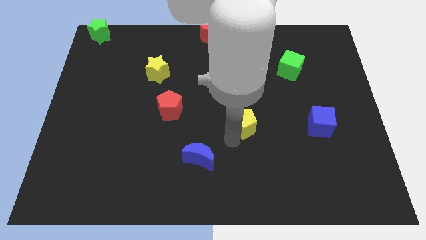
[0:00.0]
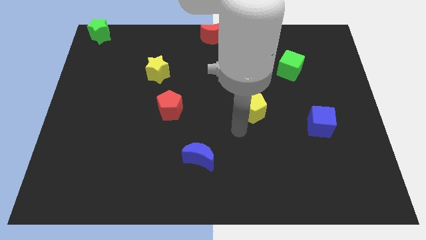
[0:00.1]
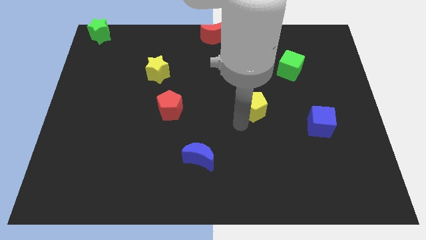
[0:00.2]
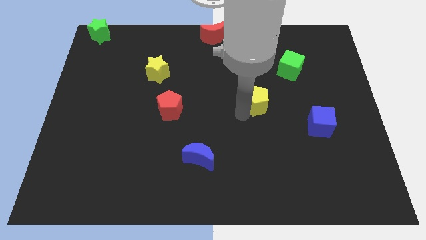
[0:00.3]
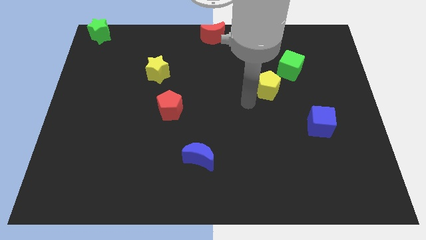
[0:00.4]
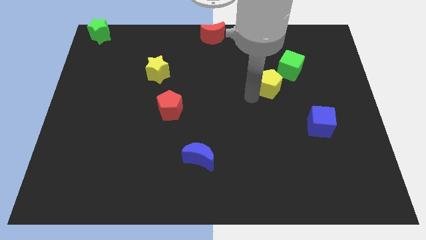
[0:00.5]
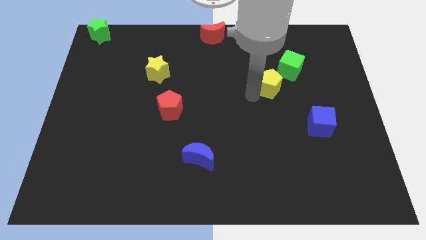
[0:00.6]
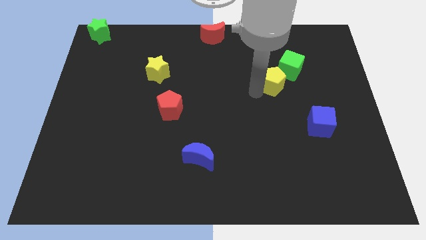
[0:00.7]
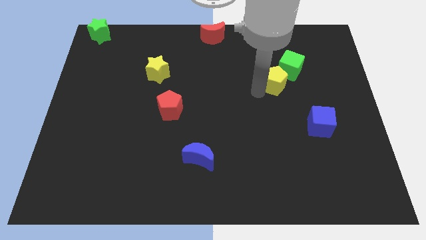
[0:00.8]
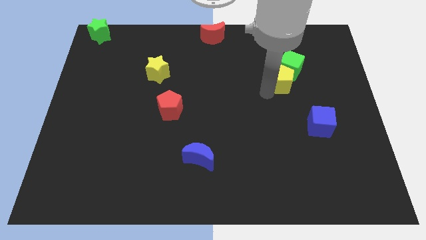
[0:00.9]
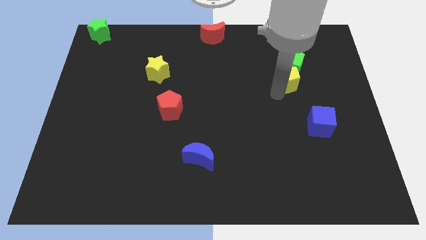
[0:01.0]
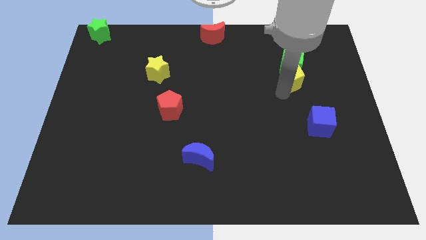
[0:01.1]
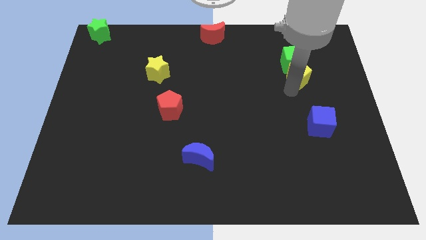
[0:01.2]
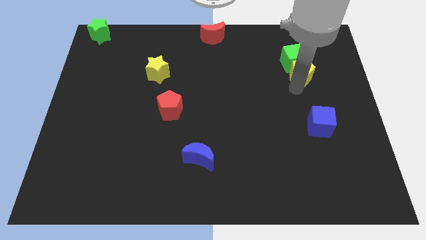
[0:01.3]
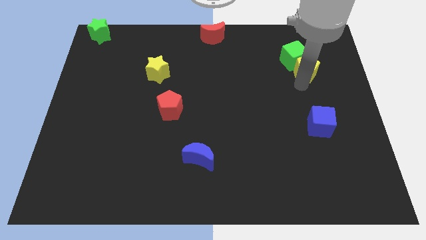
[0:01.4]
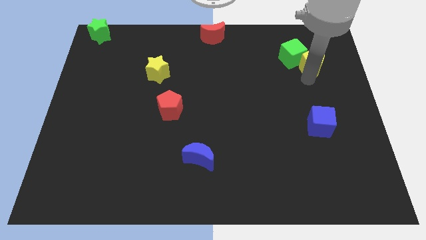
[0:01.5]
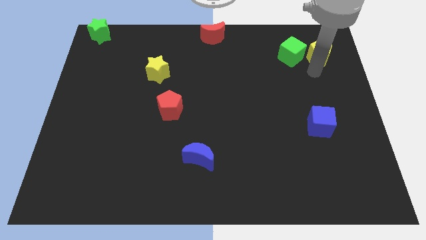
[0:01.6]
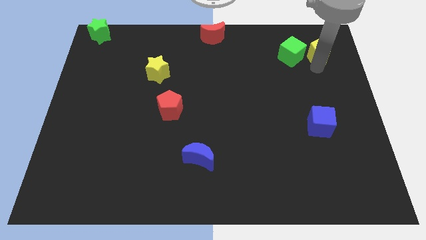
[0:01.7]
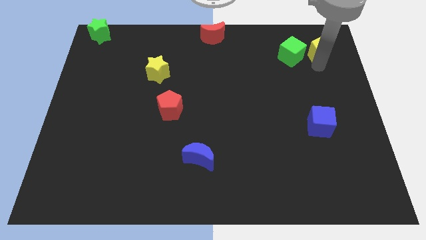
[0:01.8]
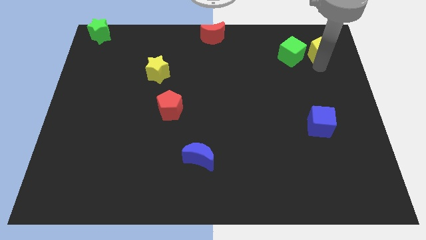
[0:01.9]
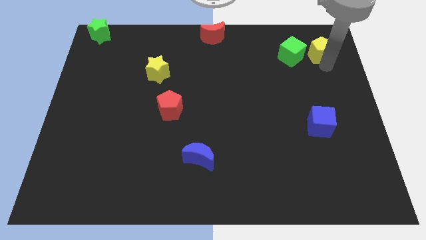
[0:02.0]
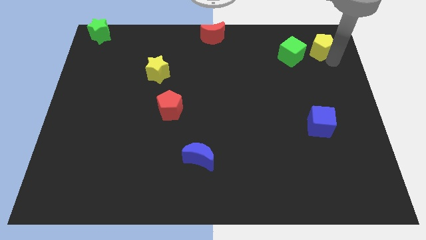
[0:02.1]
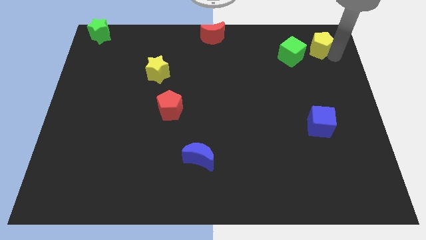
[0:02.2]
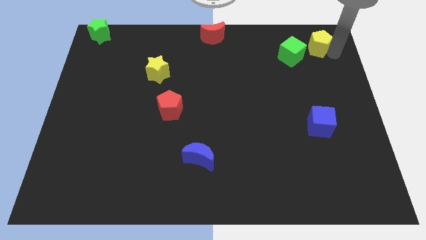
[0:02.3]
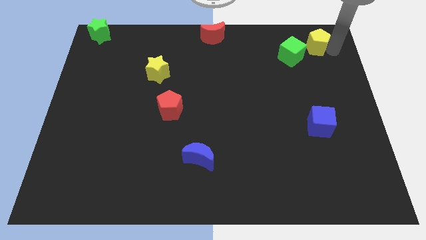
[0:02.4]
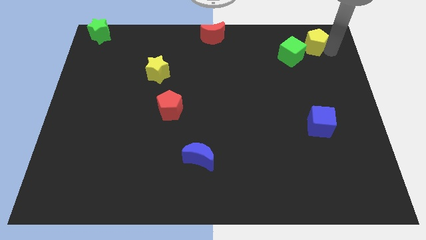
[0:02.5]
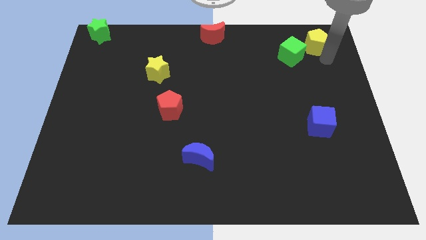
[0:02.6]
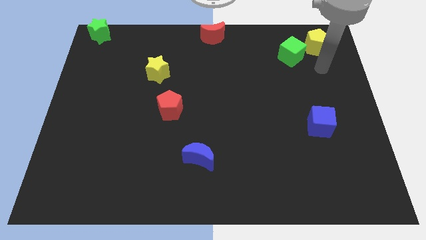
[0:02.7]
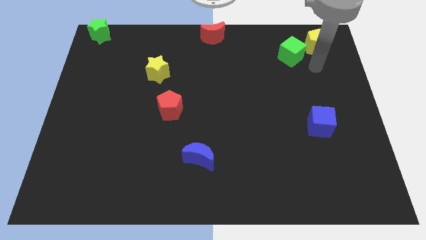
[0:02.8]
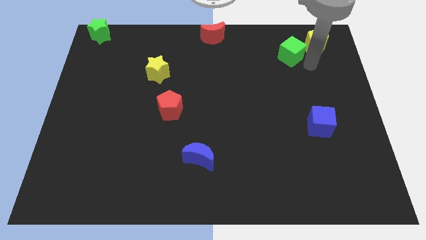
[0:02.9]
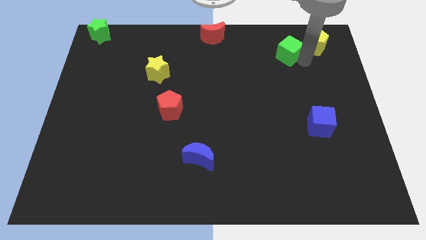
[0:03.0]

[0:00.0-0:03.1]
move yellow pentagon to the right side of the green cube

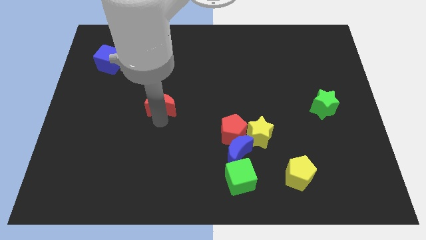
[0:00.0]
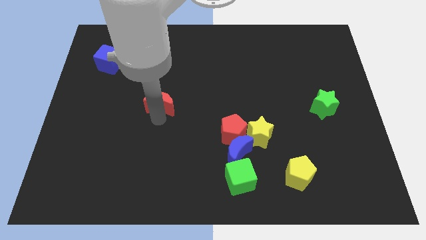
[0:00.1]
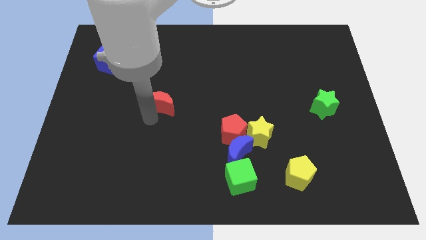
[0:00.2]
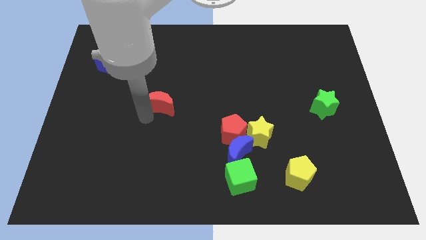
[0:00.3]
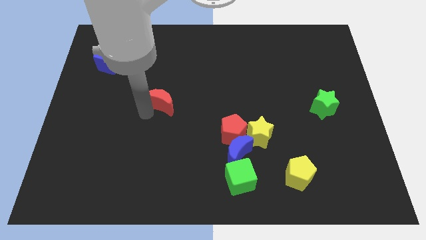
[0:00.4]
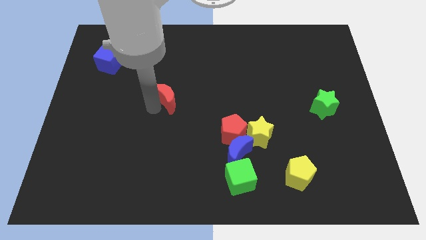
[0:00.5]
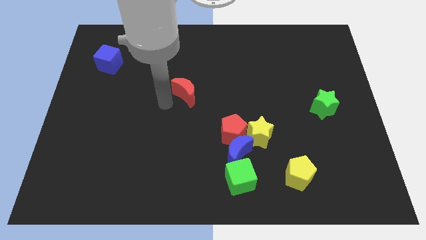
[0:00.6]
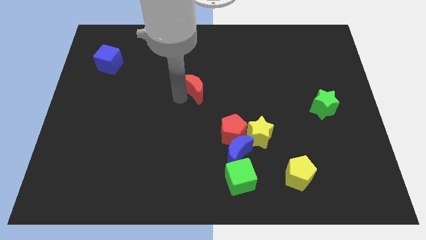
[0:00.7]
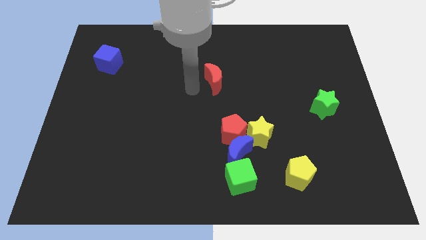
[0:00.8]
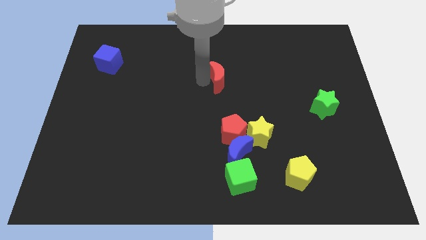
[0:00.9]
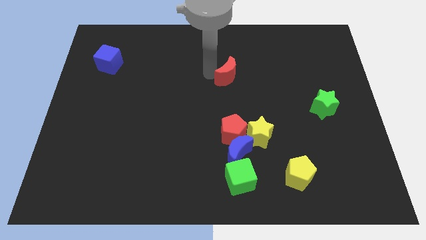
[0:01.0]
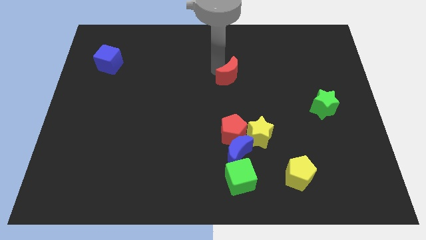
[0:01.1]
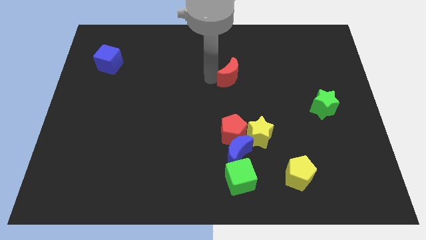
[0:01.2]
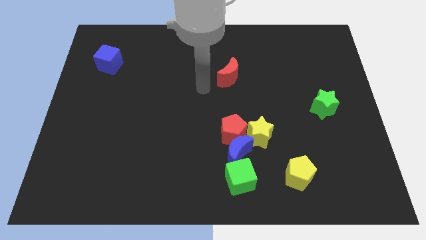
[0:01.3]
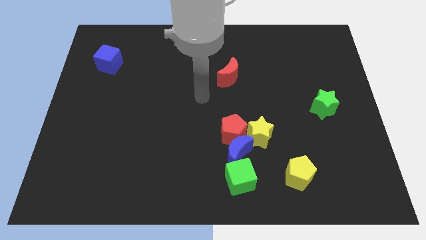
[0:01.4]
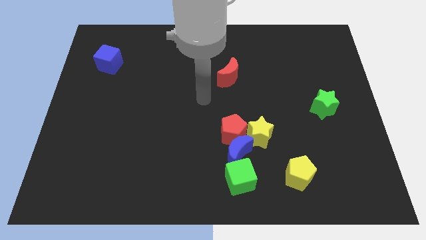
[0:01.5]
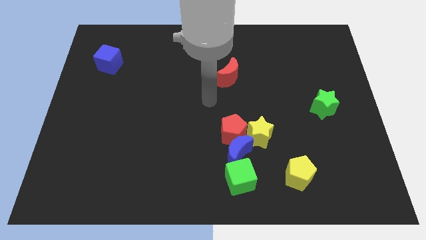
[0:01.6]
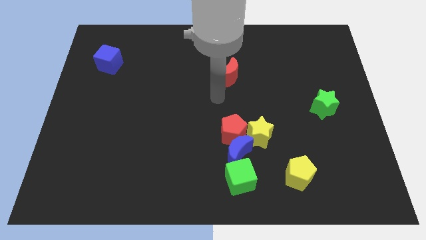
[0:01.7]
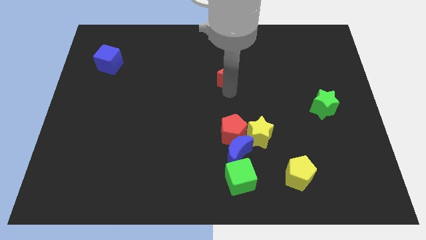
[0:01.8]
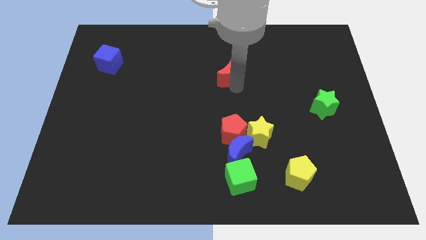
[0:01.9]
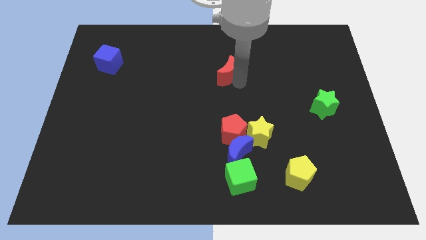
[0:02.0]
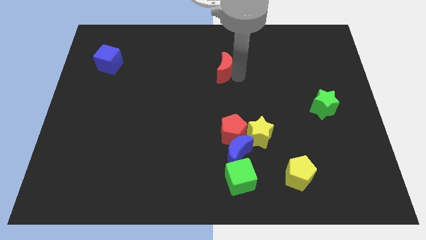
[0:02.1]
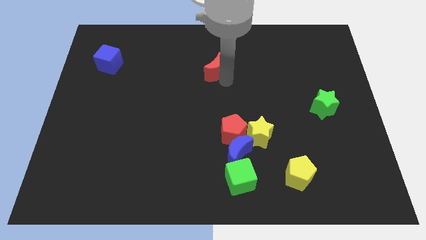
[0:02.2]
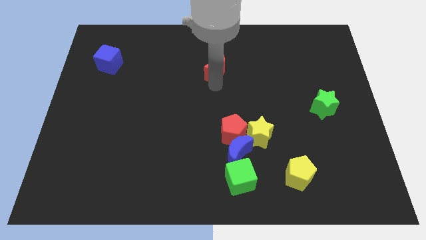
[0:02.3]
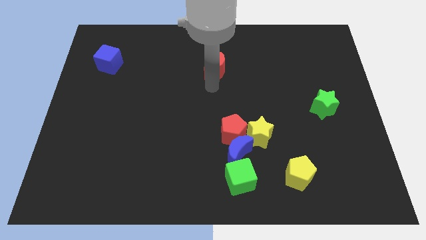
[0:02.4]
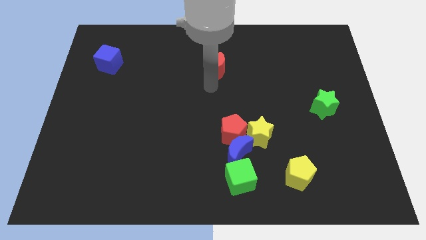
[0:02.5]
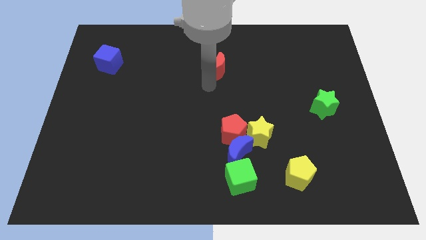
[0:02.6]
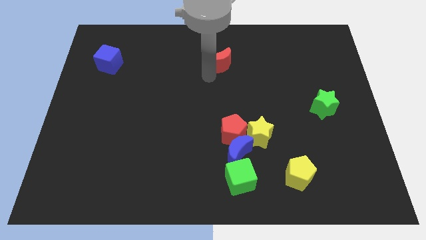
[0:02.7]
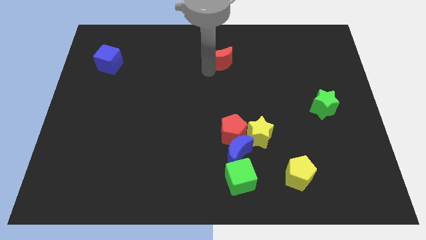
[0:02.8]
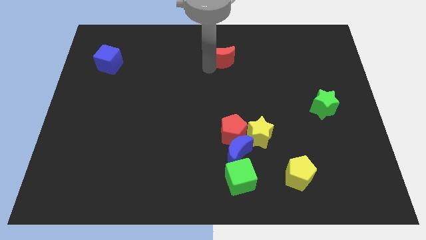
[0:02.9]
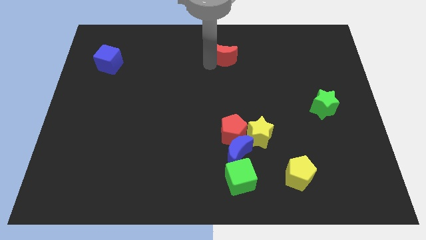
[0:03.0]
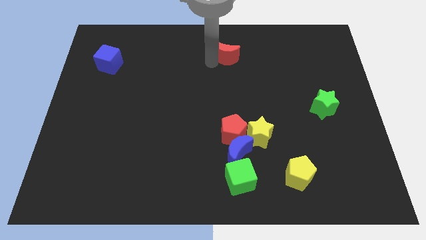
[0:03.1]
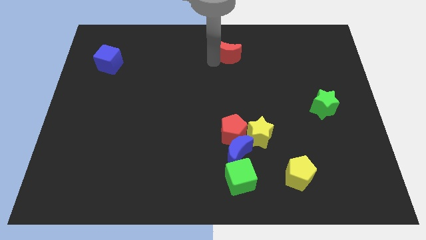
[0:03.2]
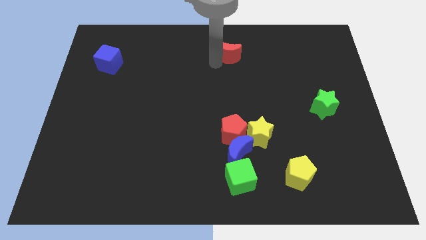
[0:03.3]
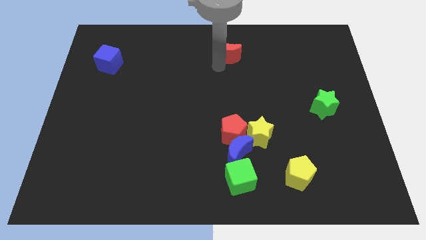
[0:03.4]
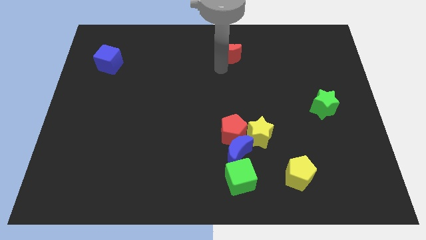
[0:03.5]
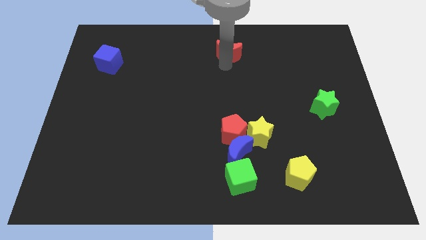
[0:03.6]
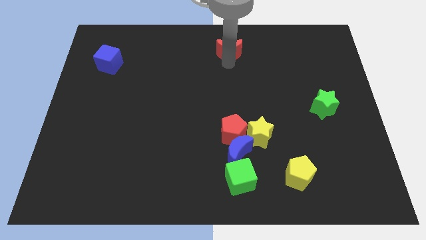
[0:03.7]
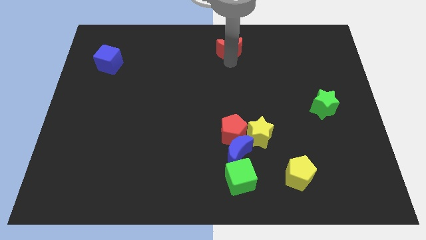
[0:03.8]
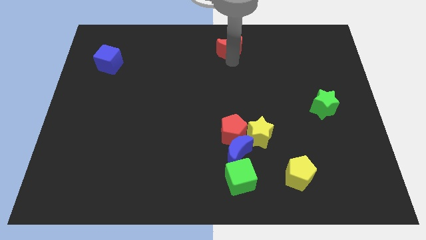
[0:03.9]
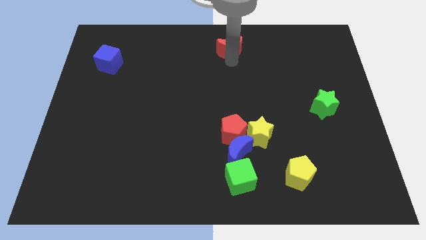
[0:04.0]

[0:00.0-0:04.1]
push red moon towards top center

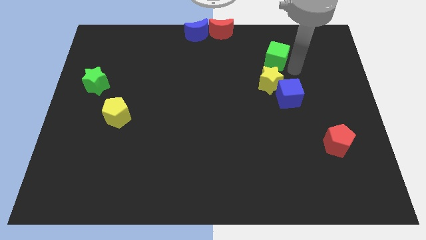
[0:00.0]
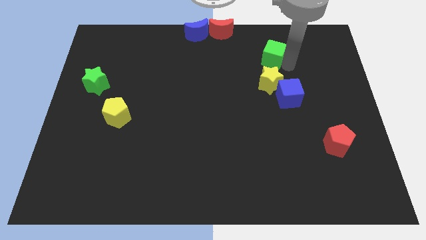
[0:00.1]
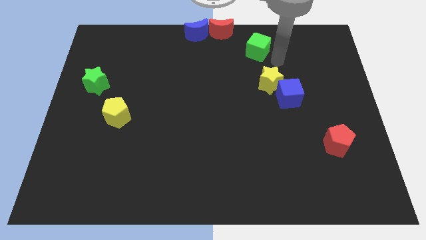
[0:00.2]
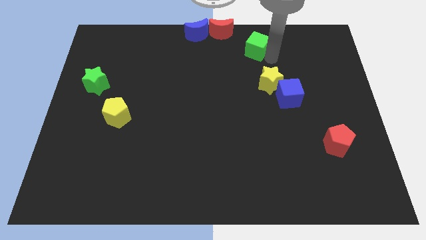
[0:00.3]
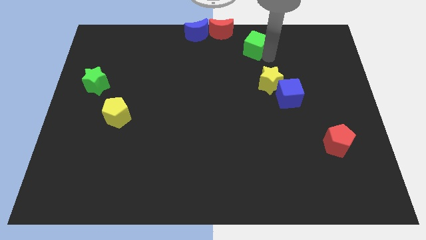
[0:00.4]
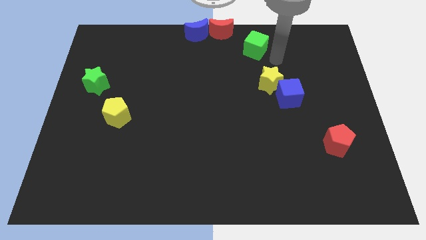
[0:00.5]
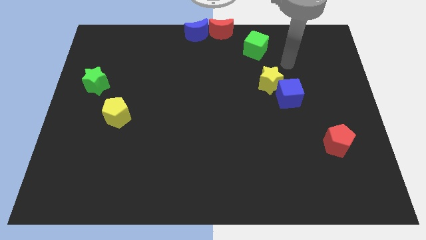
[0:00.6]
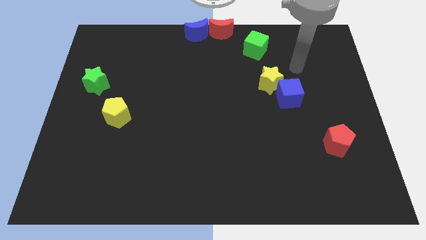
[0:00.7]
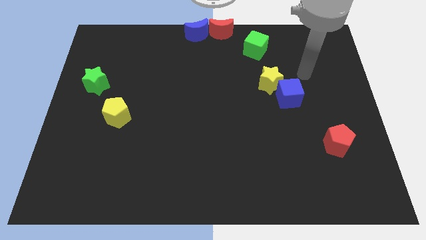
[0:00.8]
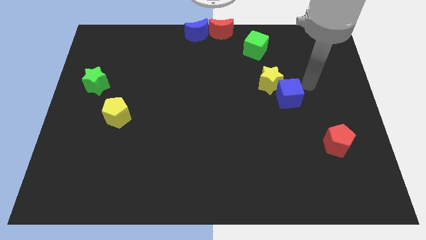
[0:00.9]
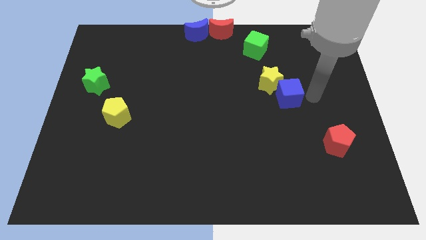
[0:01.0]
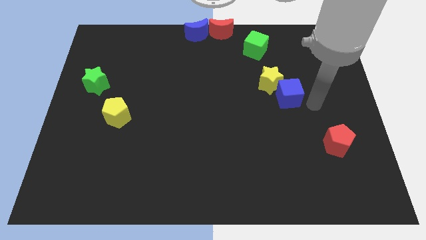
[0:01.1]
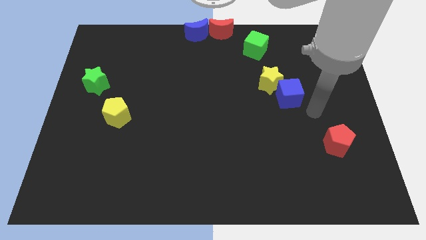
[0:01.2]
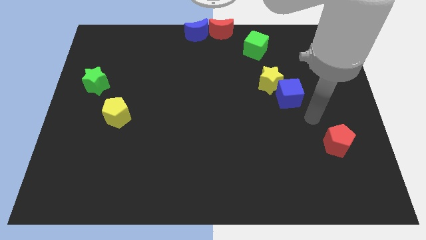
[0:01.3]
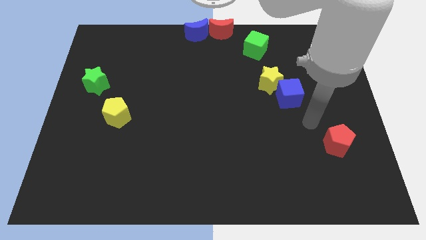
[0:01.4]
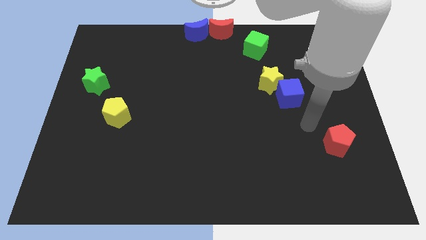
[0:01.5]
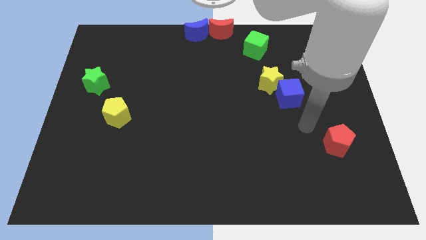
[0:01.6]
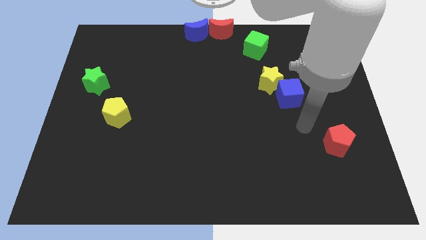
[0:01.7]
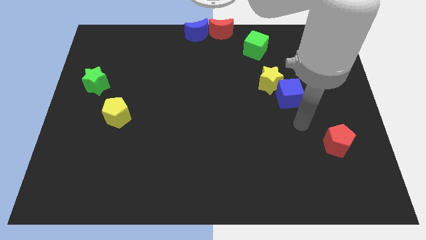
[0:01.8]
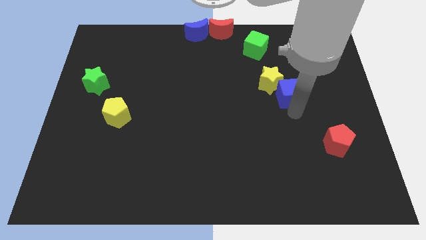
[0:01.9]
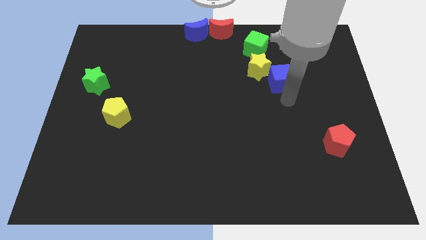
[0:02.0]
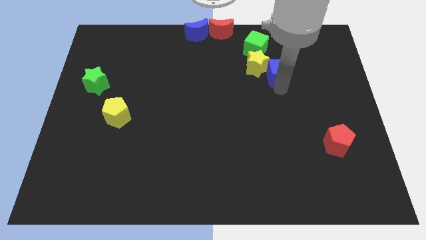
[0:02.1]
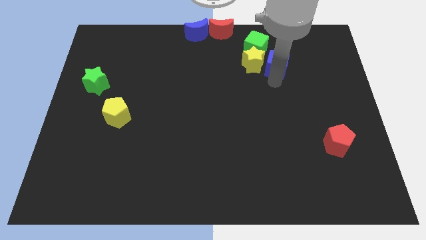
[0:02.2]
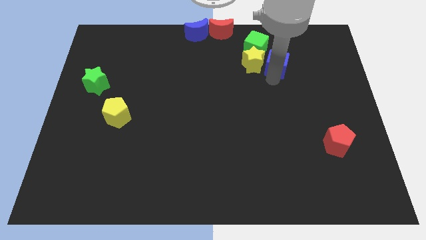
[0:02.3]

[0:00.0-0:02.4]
place blue cube right to yellow star
